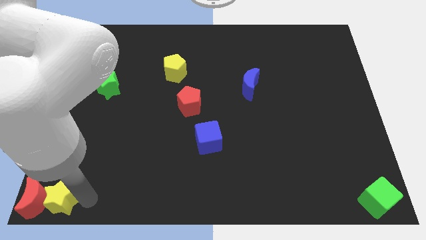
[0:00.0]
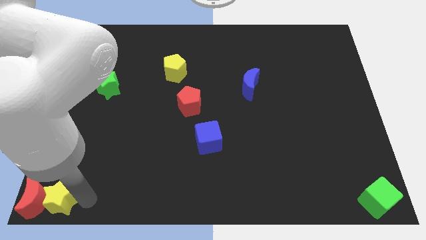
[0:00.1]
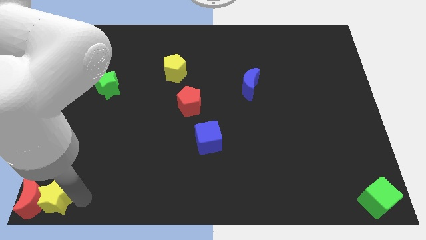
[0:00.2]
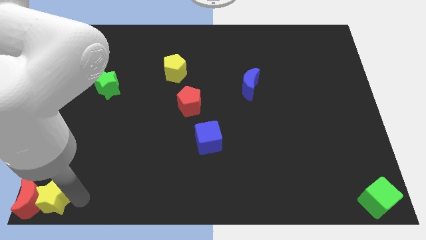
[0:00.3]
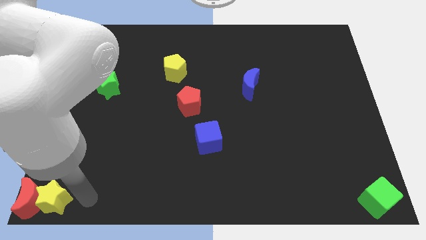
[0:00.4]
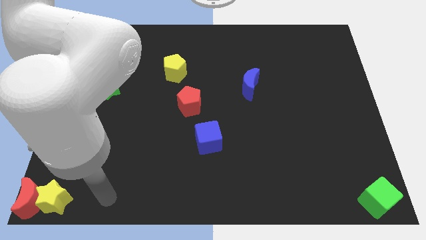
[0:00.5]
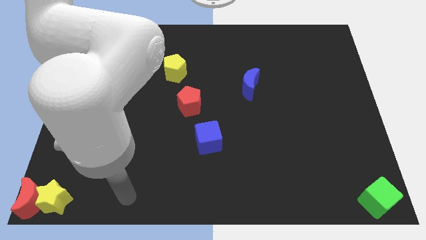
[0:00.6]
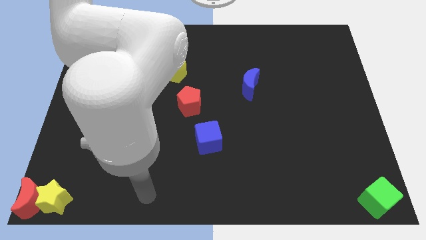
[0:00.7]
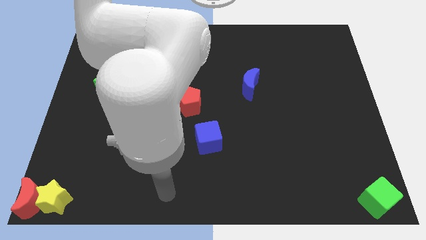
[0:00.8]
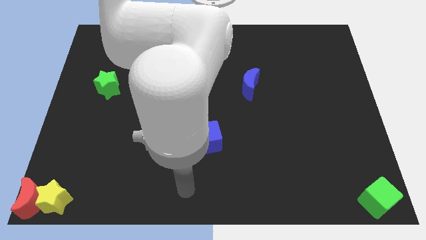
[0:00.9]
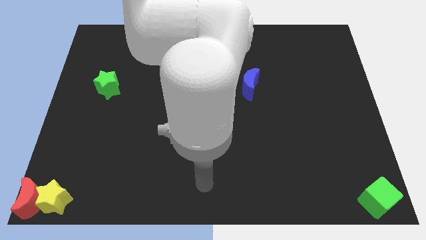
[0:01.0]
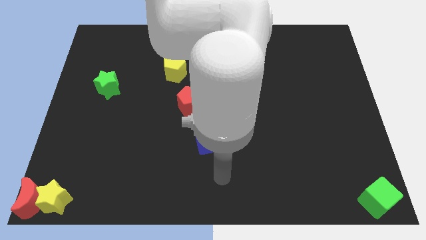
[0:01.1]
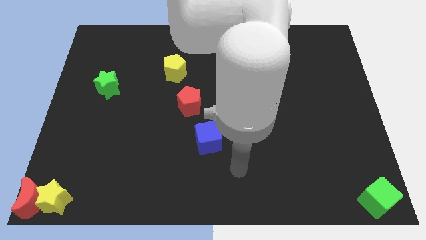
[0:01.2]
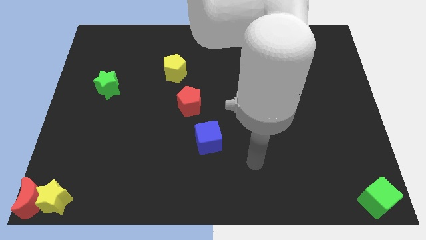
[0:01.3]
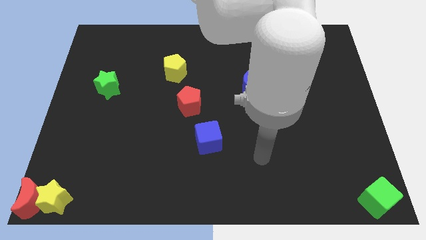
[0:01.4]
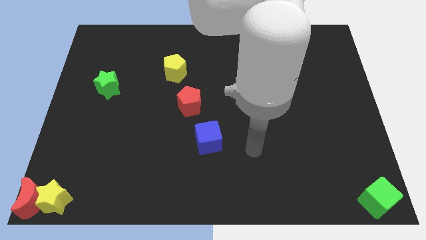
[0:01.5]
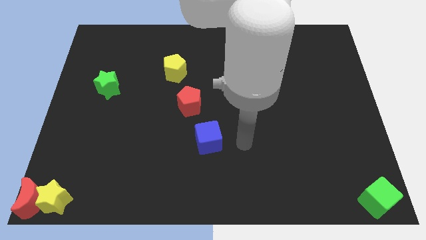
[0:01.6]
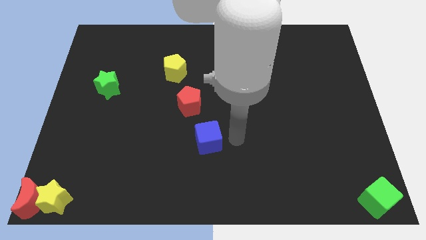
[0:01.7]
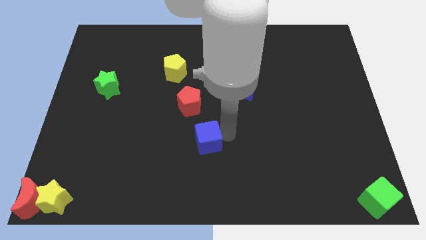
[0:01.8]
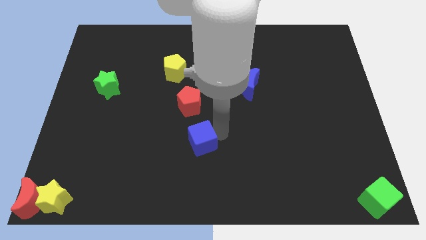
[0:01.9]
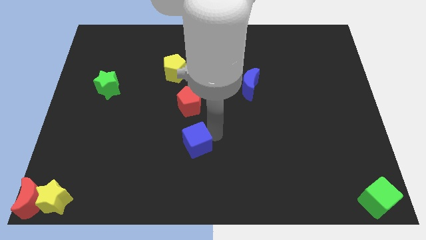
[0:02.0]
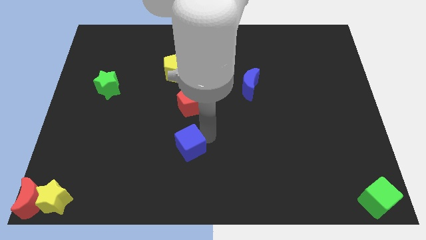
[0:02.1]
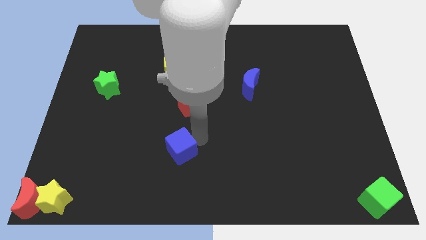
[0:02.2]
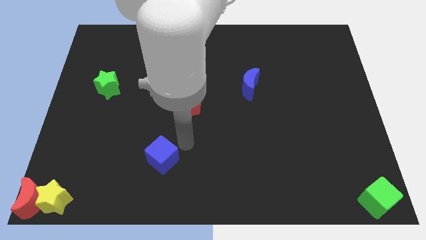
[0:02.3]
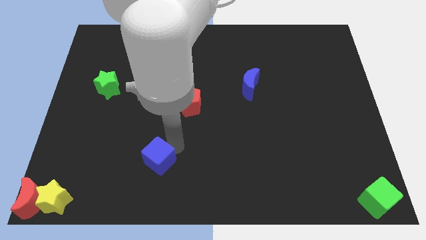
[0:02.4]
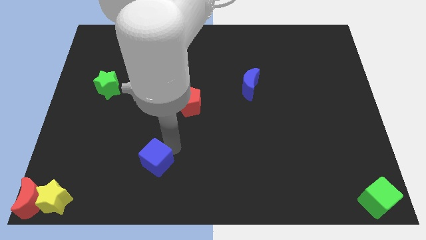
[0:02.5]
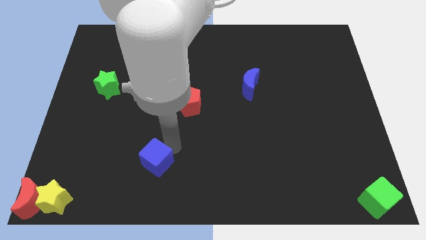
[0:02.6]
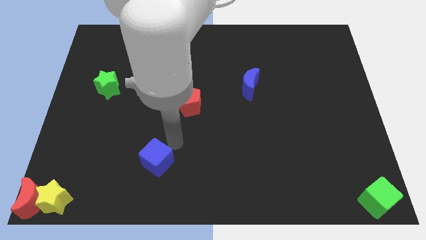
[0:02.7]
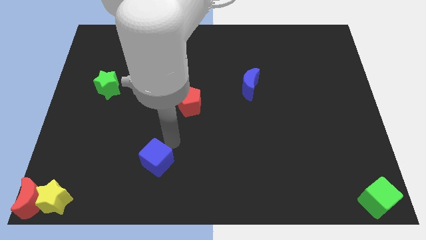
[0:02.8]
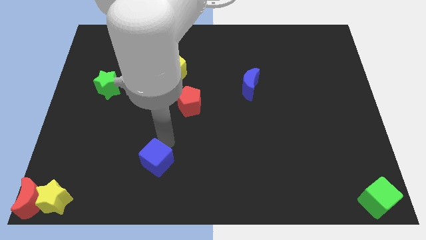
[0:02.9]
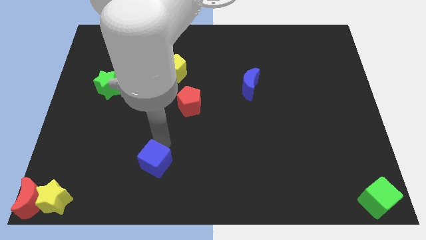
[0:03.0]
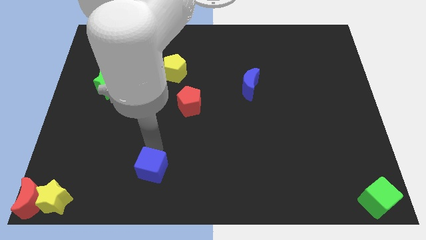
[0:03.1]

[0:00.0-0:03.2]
place the blue cube top right to the yellow star

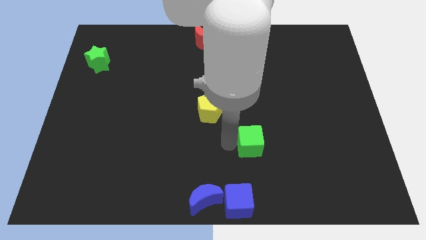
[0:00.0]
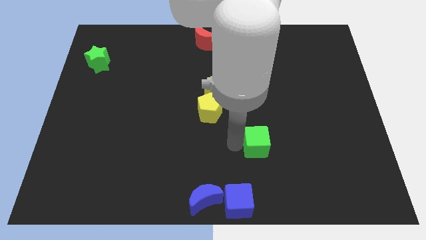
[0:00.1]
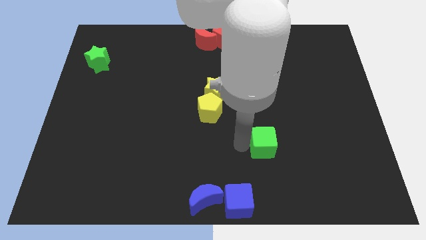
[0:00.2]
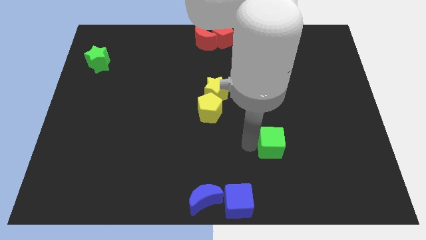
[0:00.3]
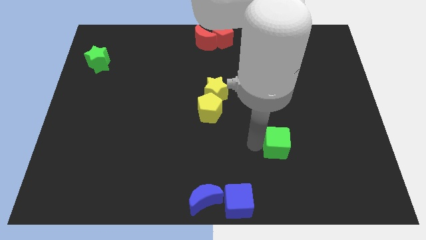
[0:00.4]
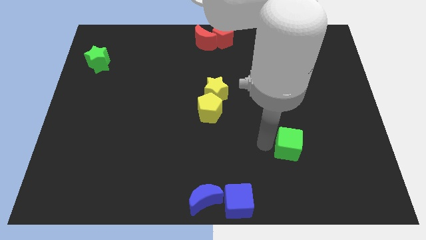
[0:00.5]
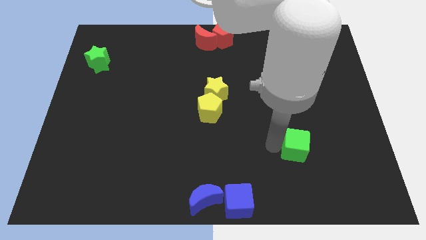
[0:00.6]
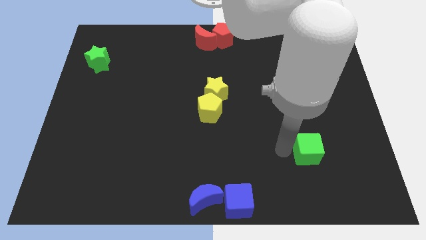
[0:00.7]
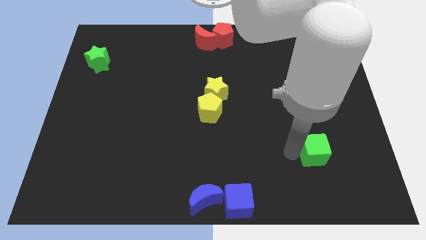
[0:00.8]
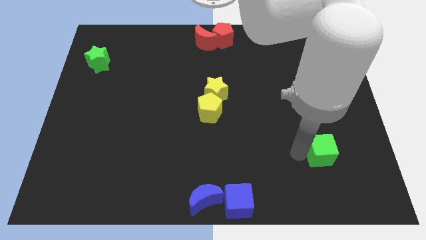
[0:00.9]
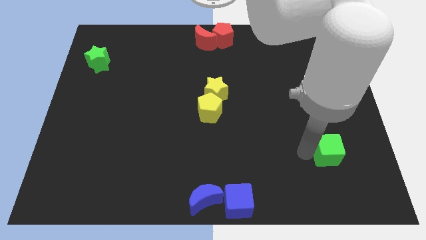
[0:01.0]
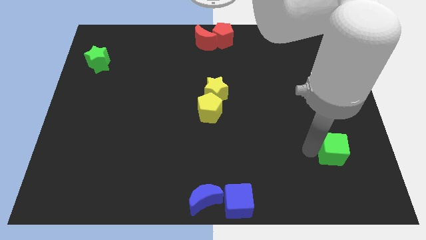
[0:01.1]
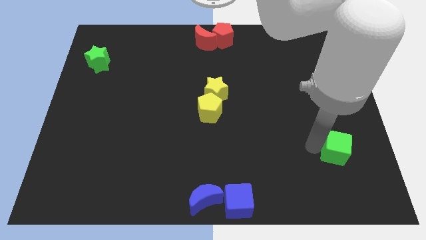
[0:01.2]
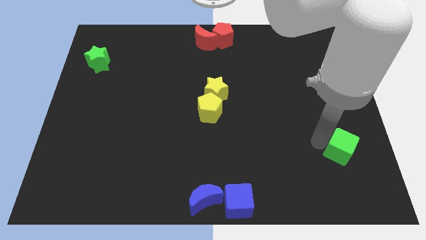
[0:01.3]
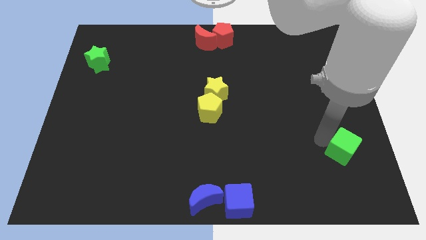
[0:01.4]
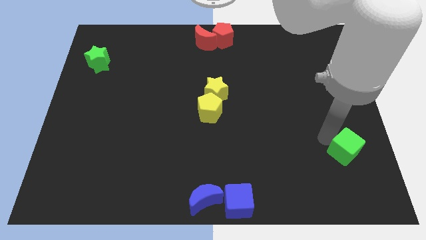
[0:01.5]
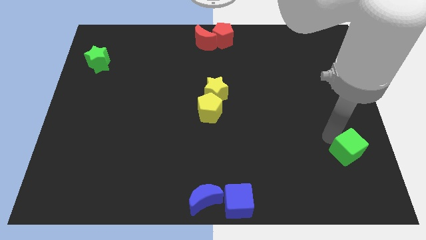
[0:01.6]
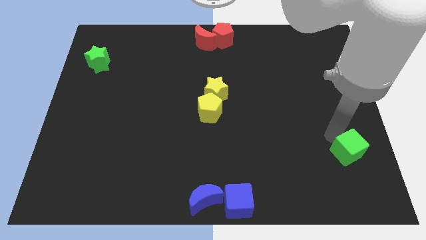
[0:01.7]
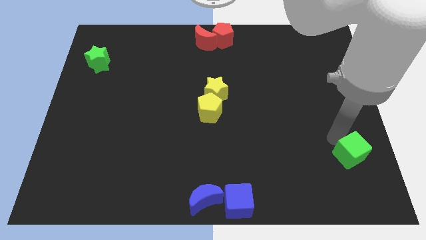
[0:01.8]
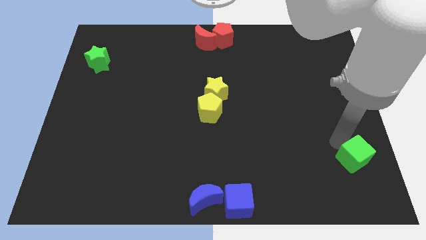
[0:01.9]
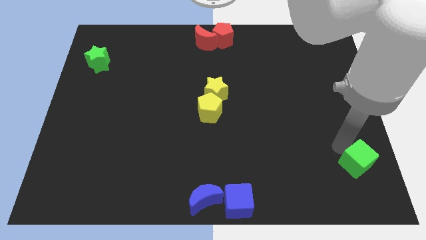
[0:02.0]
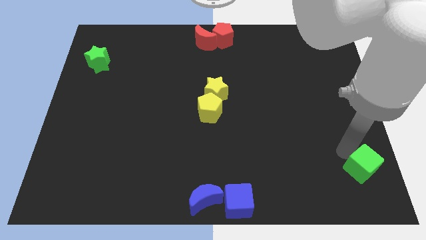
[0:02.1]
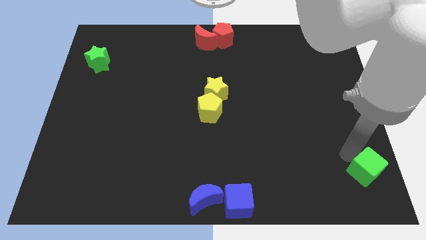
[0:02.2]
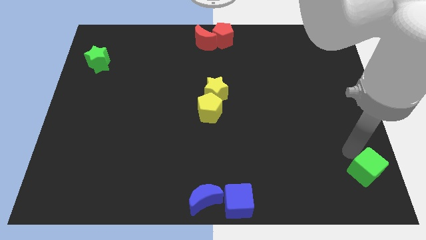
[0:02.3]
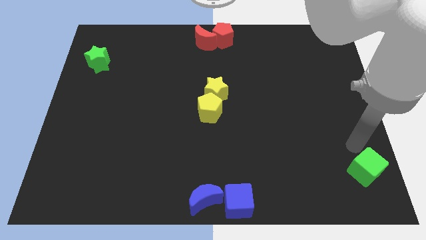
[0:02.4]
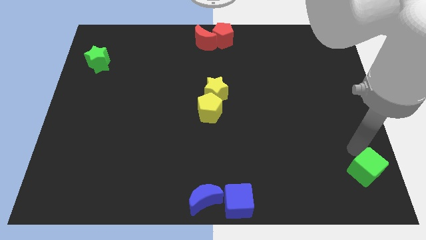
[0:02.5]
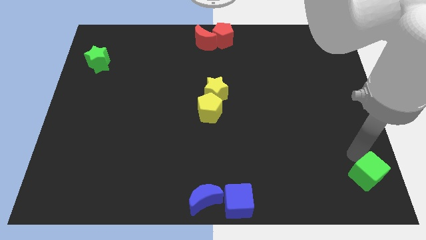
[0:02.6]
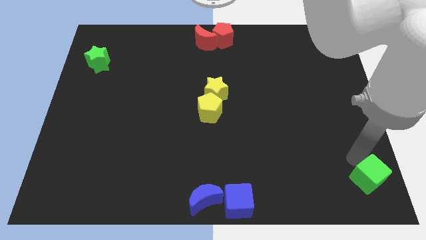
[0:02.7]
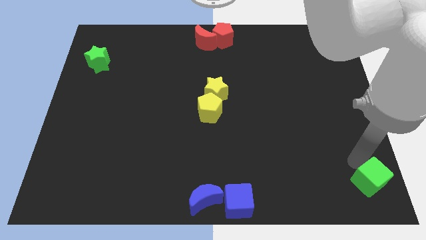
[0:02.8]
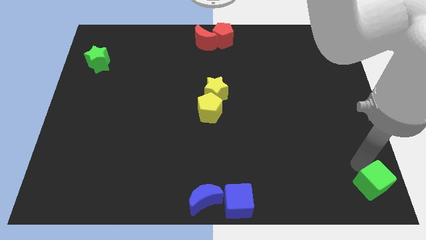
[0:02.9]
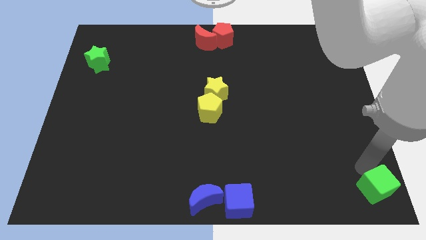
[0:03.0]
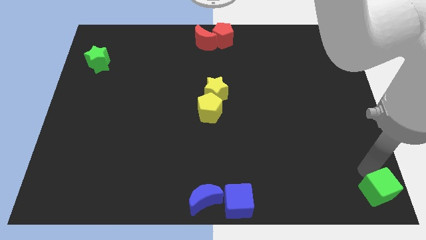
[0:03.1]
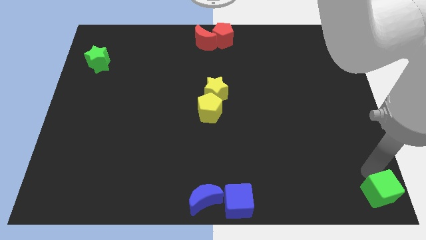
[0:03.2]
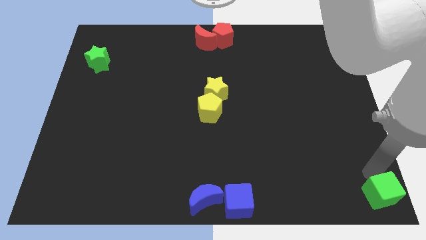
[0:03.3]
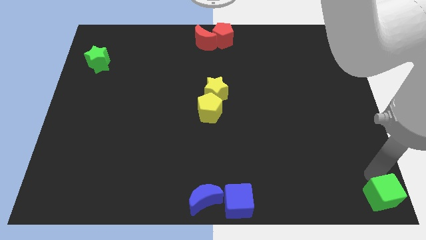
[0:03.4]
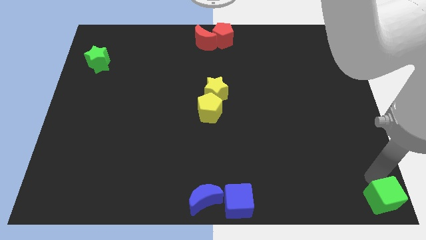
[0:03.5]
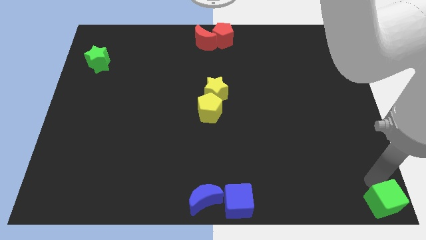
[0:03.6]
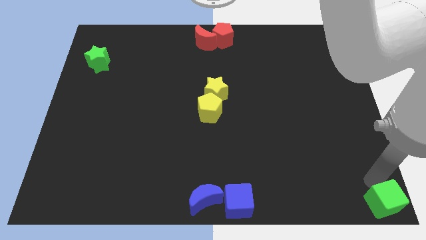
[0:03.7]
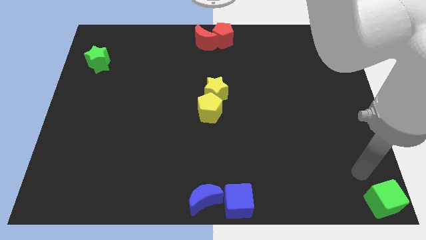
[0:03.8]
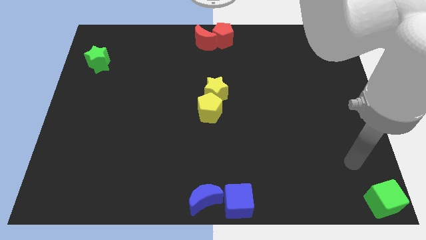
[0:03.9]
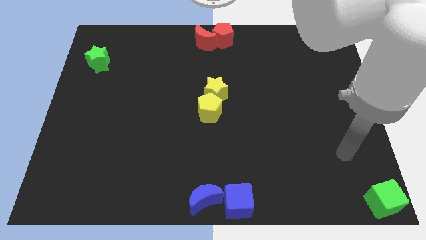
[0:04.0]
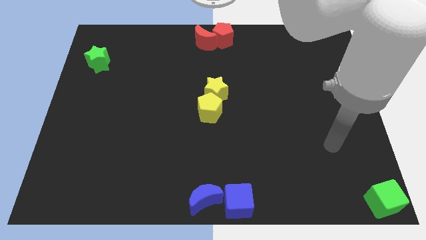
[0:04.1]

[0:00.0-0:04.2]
place a green cube at the bottom right corner of the board

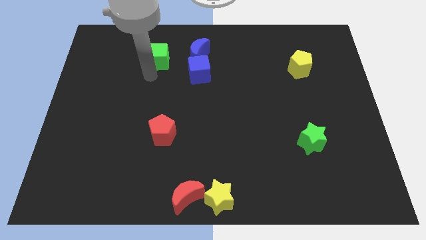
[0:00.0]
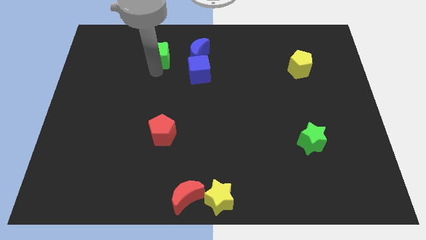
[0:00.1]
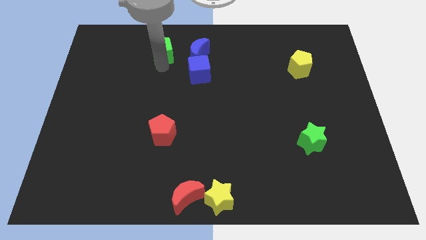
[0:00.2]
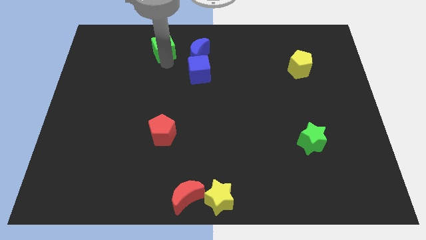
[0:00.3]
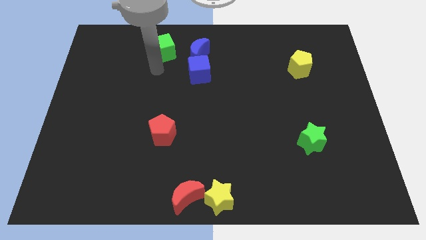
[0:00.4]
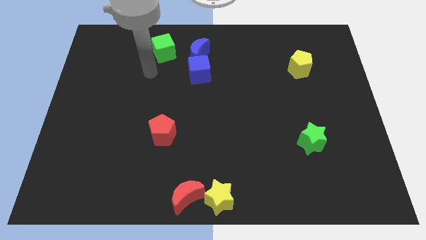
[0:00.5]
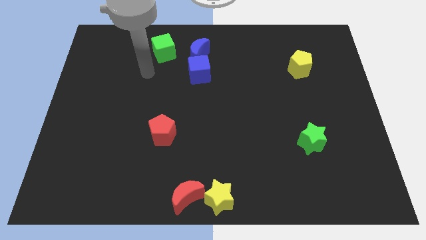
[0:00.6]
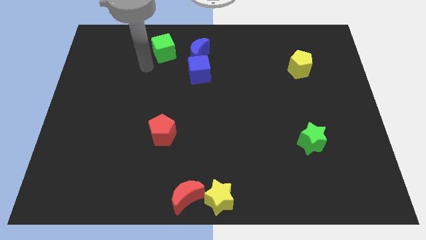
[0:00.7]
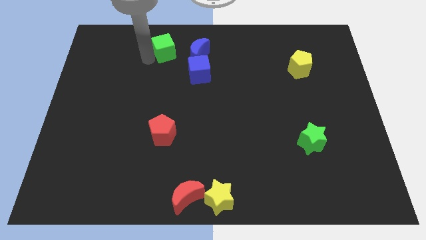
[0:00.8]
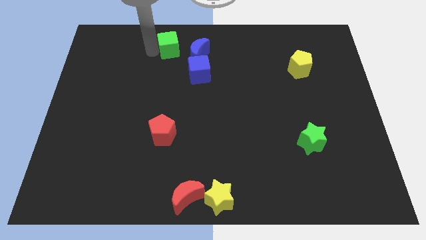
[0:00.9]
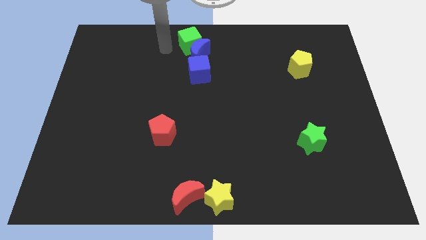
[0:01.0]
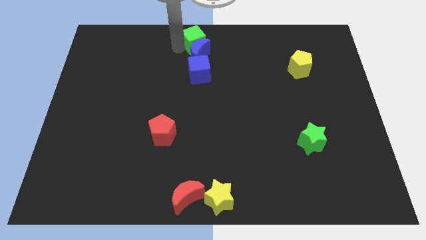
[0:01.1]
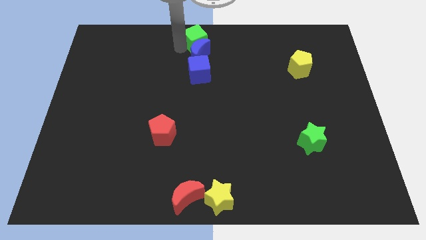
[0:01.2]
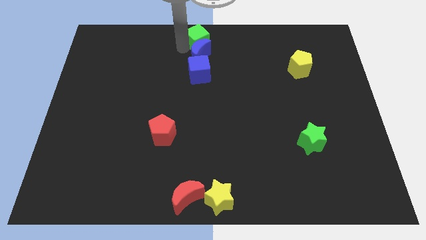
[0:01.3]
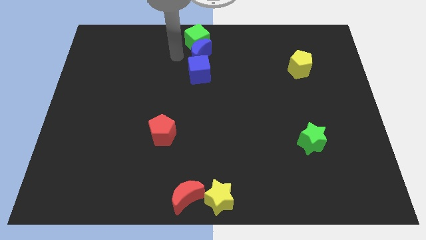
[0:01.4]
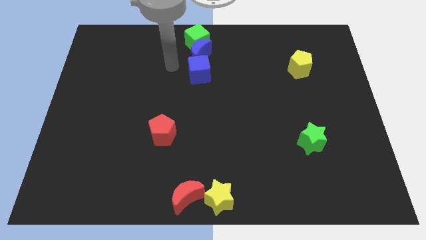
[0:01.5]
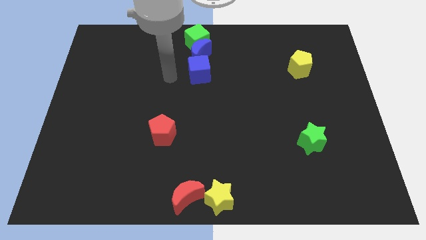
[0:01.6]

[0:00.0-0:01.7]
put the green cube at the top of the blue crescent
